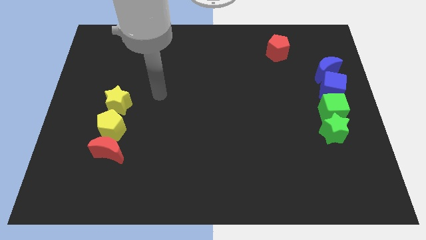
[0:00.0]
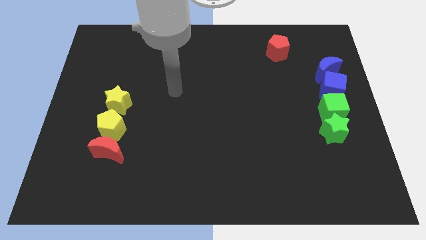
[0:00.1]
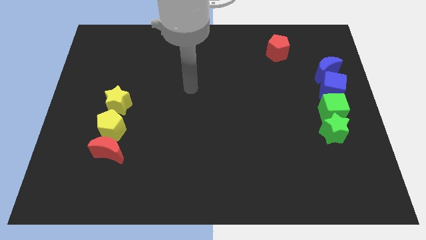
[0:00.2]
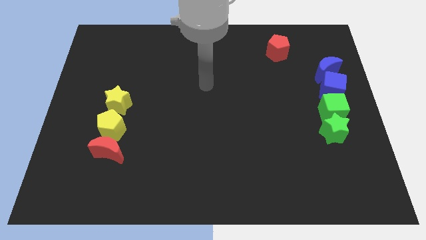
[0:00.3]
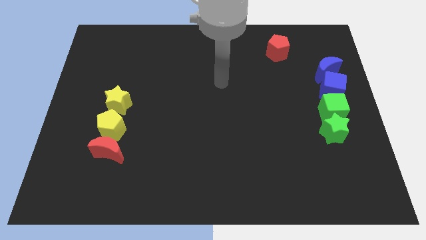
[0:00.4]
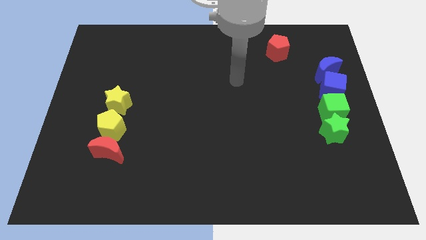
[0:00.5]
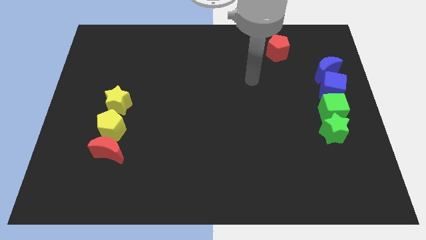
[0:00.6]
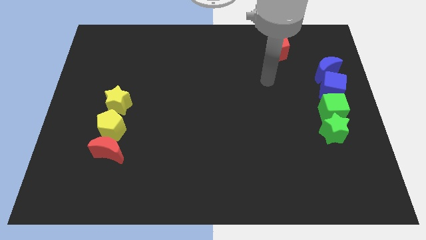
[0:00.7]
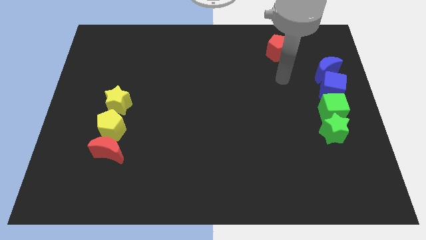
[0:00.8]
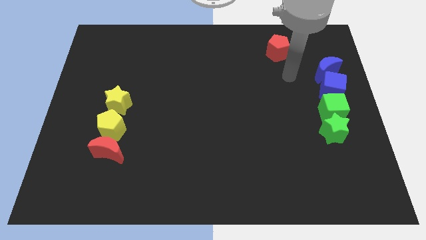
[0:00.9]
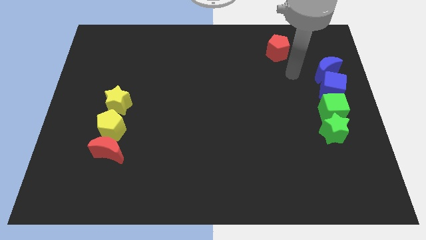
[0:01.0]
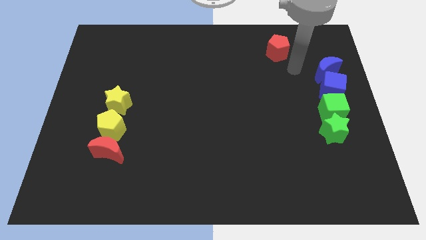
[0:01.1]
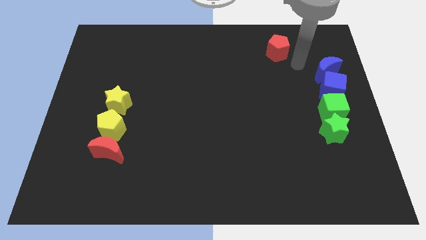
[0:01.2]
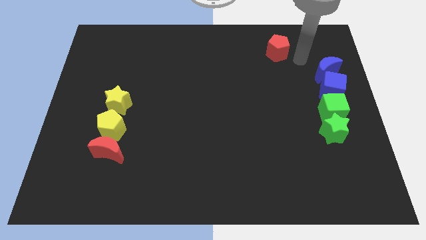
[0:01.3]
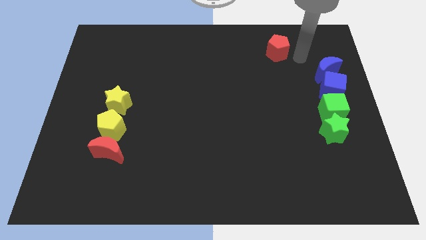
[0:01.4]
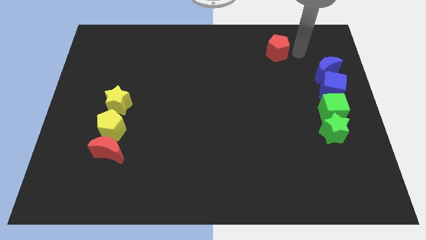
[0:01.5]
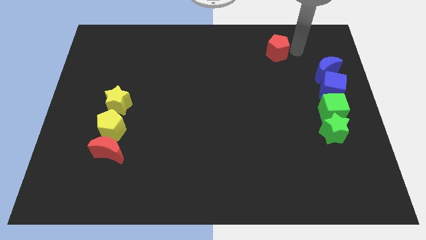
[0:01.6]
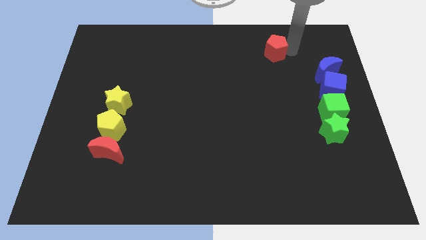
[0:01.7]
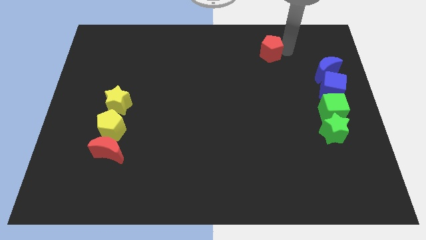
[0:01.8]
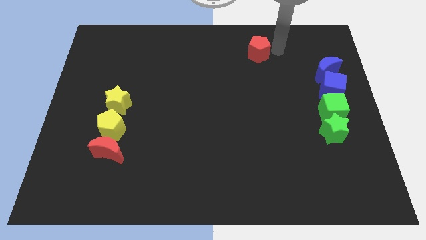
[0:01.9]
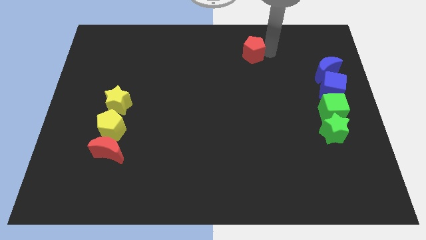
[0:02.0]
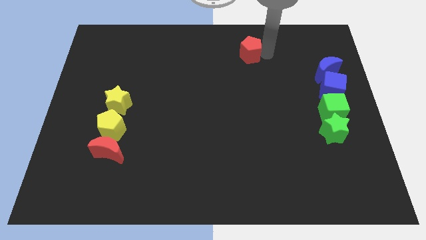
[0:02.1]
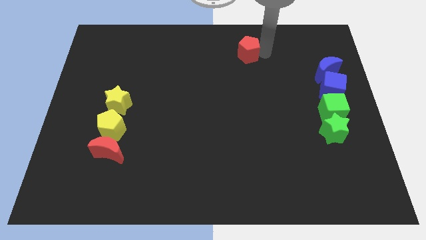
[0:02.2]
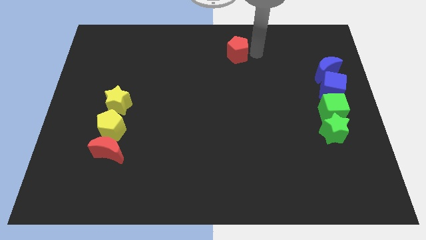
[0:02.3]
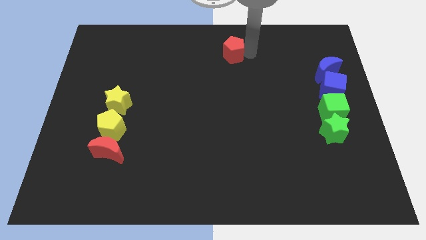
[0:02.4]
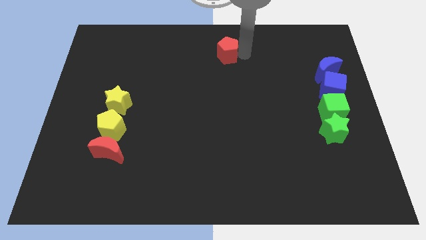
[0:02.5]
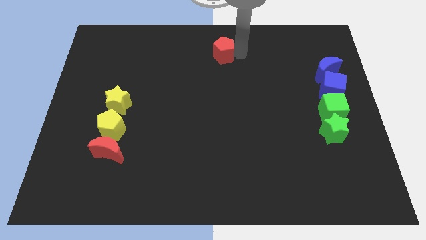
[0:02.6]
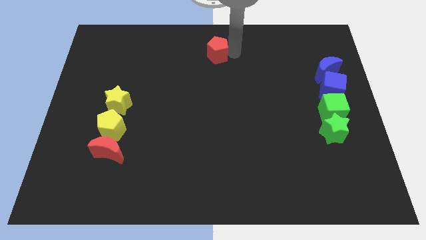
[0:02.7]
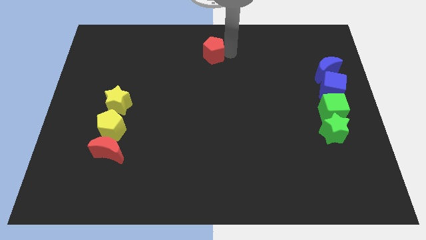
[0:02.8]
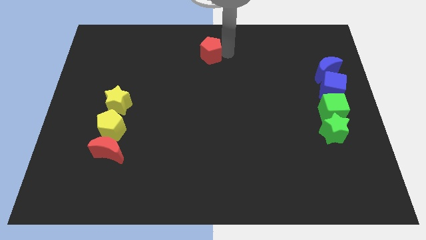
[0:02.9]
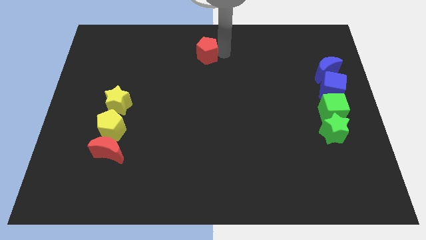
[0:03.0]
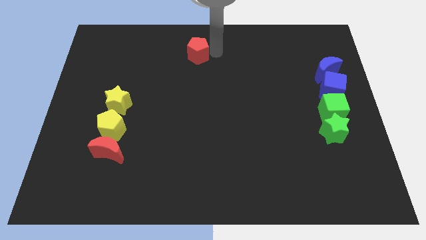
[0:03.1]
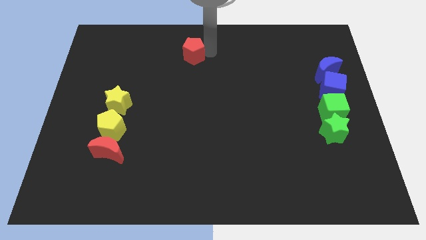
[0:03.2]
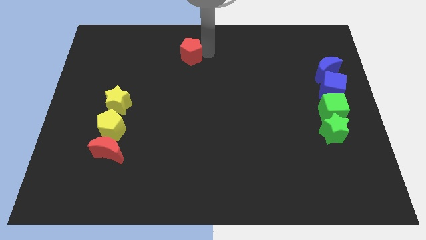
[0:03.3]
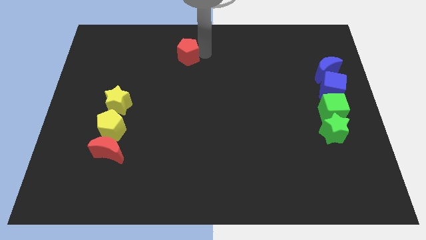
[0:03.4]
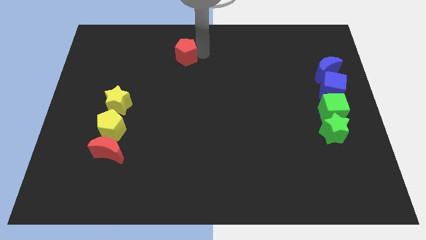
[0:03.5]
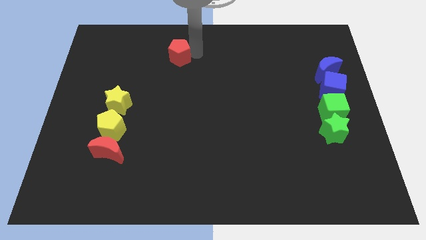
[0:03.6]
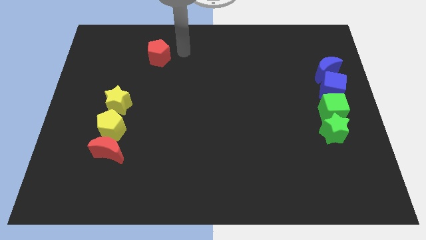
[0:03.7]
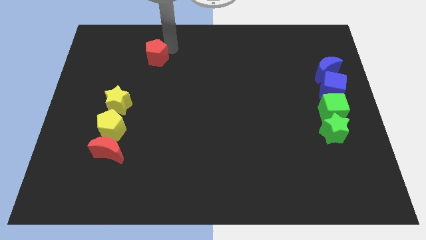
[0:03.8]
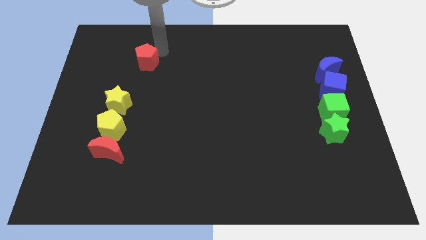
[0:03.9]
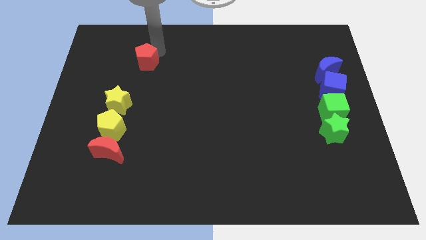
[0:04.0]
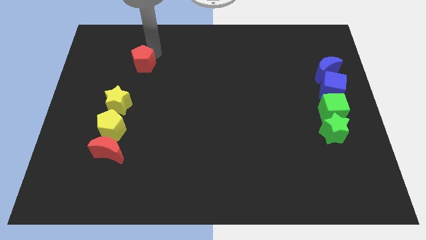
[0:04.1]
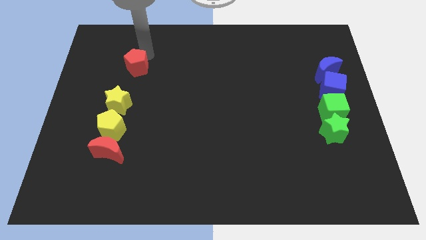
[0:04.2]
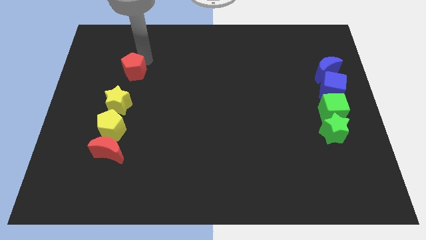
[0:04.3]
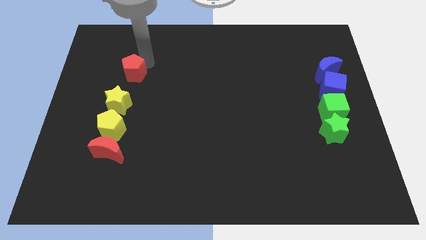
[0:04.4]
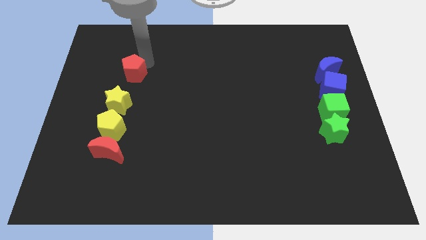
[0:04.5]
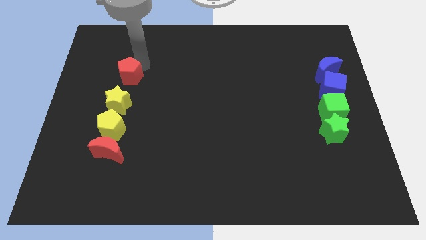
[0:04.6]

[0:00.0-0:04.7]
push the red pentagon above the yellow star

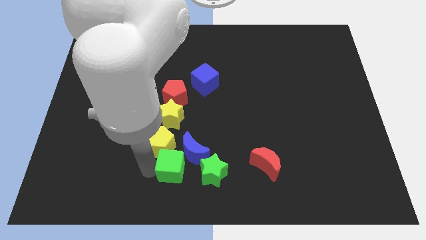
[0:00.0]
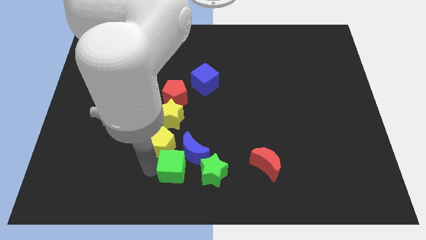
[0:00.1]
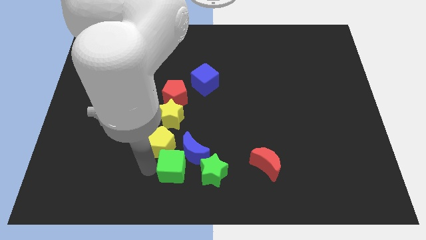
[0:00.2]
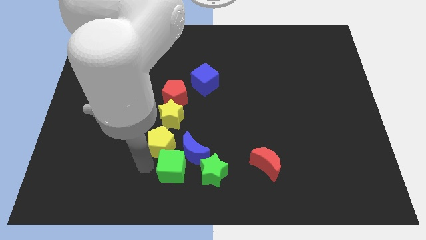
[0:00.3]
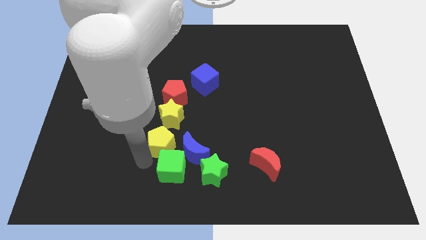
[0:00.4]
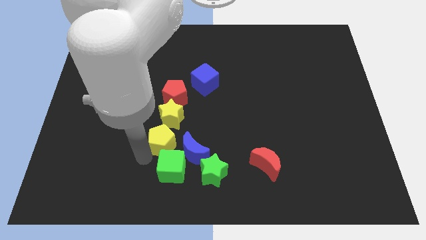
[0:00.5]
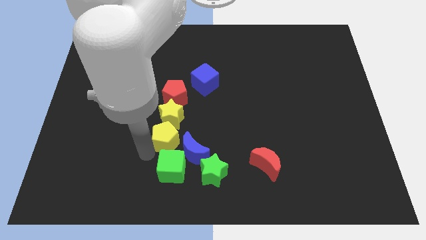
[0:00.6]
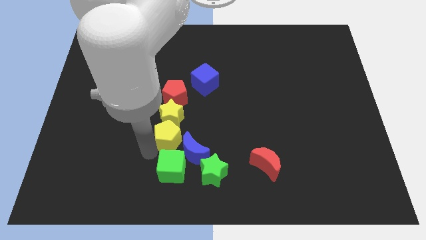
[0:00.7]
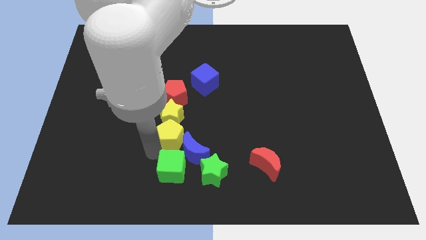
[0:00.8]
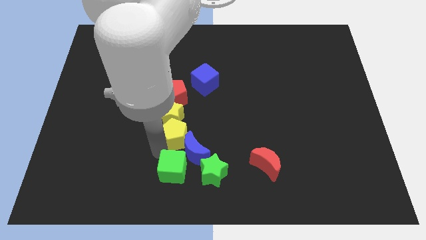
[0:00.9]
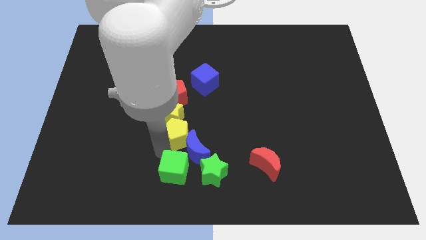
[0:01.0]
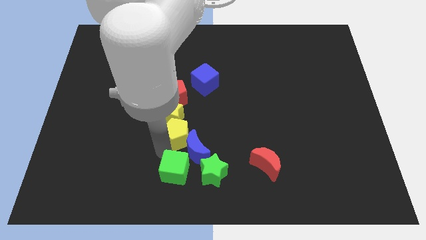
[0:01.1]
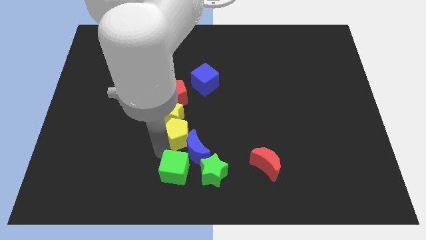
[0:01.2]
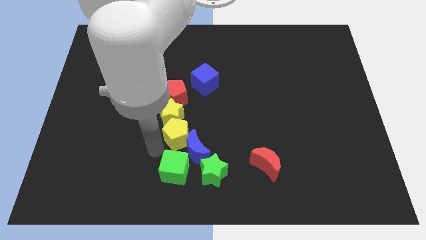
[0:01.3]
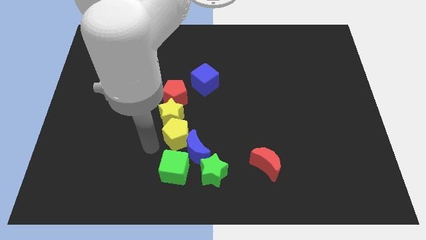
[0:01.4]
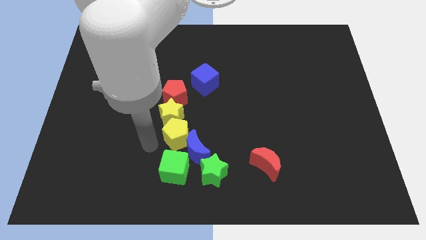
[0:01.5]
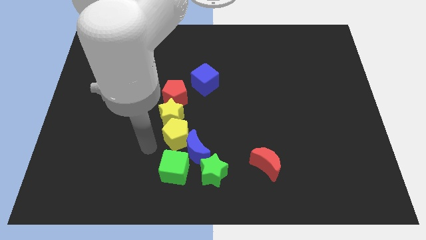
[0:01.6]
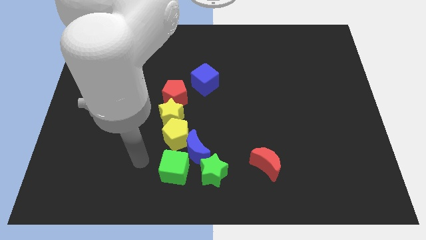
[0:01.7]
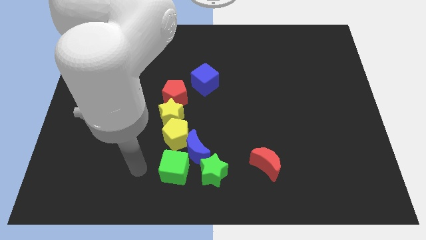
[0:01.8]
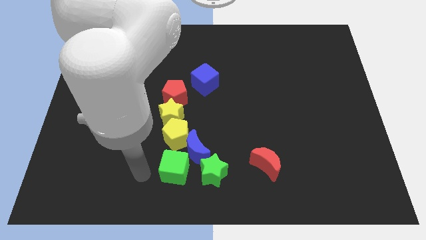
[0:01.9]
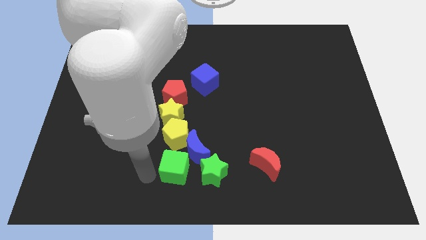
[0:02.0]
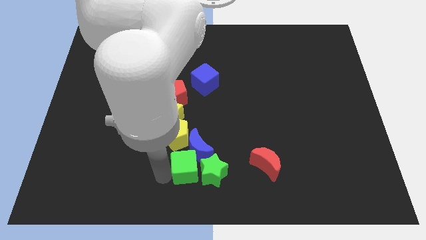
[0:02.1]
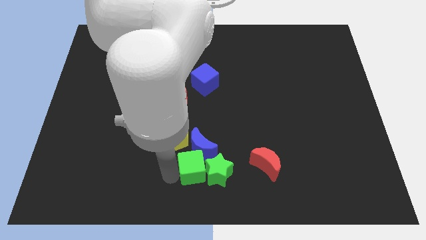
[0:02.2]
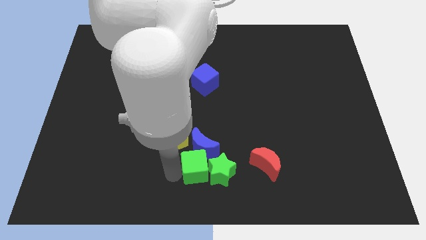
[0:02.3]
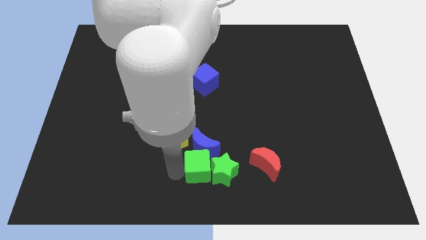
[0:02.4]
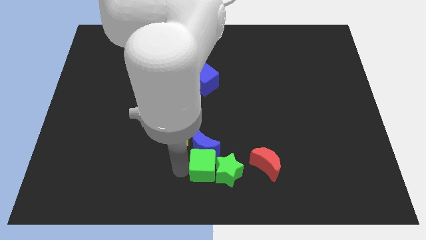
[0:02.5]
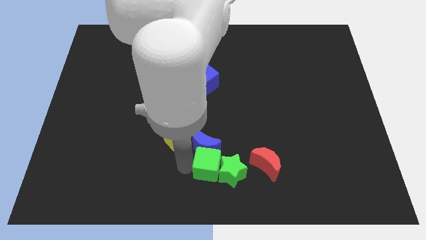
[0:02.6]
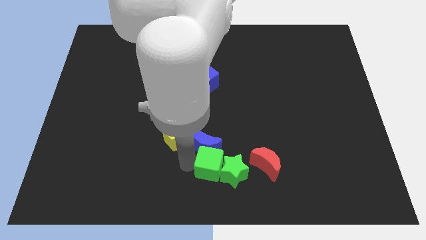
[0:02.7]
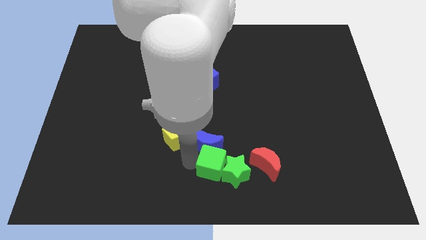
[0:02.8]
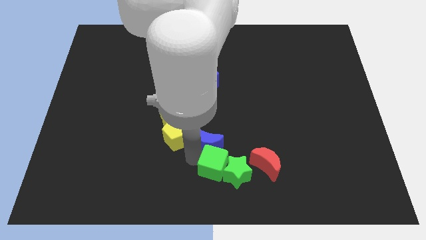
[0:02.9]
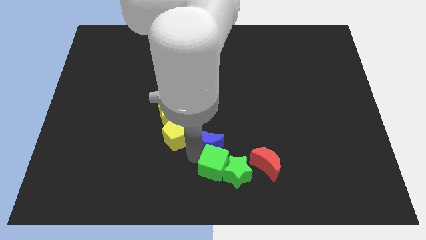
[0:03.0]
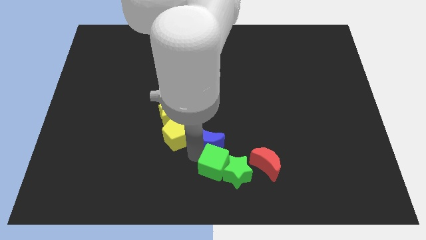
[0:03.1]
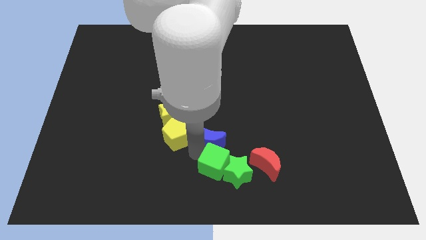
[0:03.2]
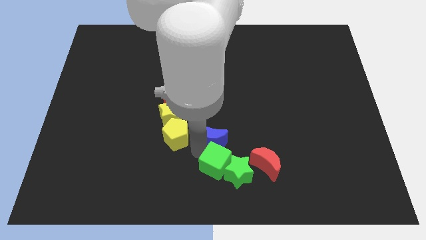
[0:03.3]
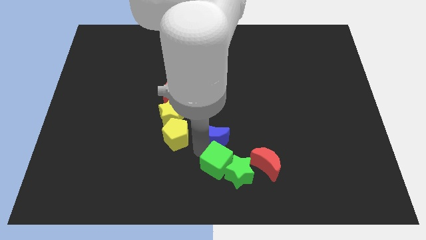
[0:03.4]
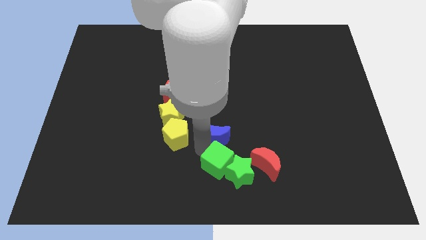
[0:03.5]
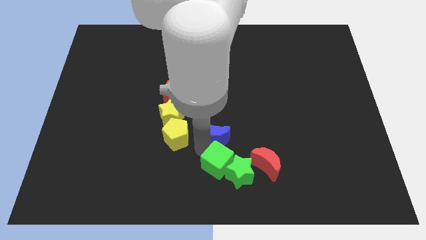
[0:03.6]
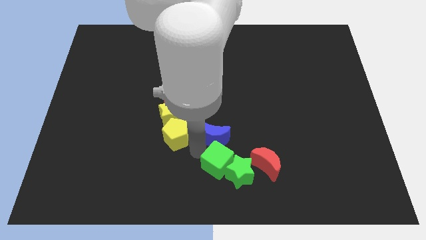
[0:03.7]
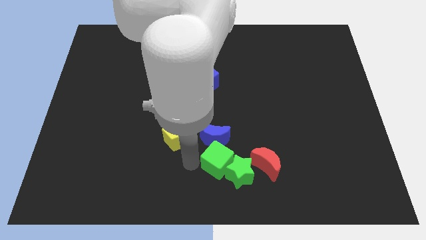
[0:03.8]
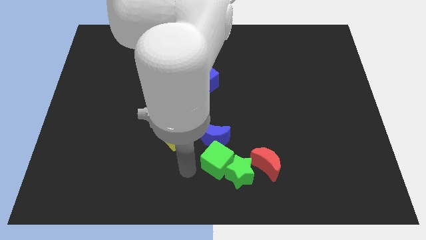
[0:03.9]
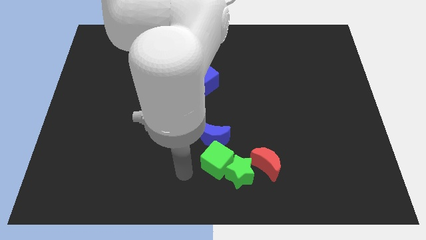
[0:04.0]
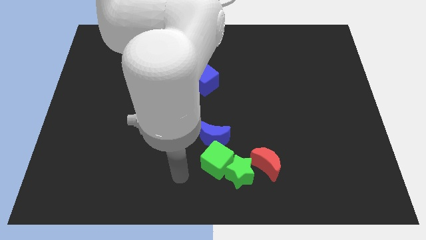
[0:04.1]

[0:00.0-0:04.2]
push the green cube into green star
